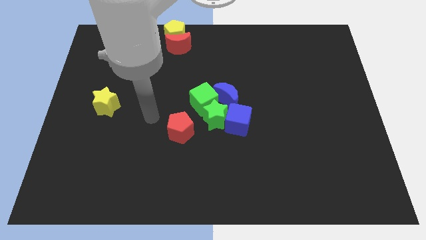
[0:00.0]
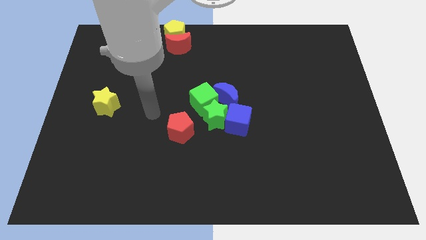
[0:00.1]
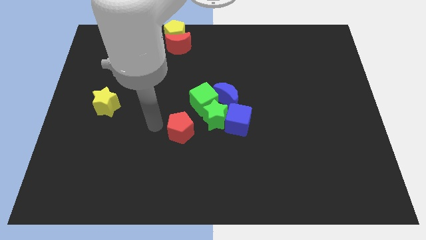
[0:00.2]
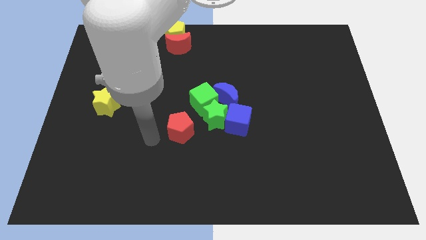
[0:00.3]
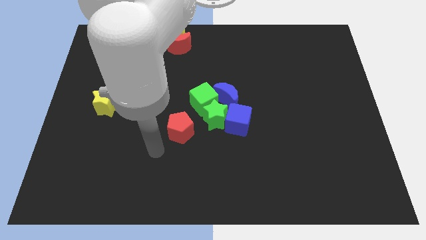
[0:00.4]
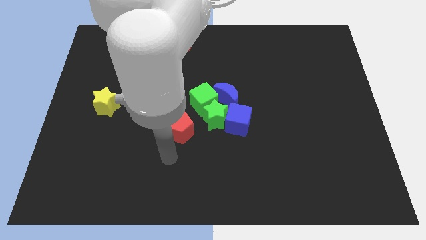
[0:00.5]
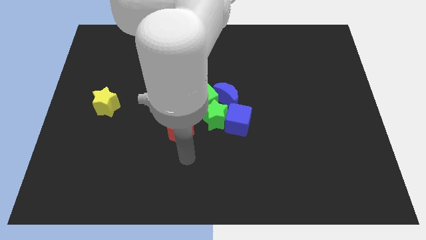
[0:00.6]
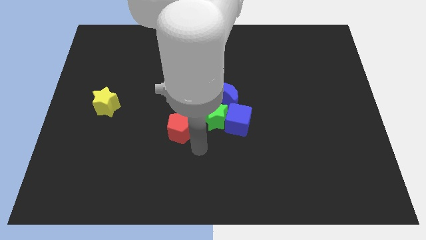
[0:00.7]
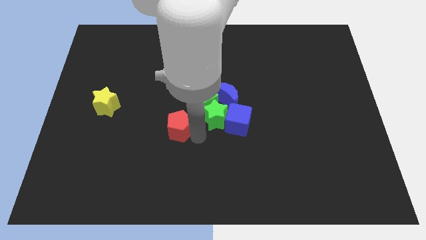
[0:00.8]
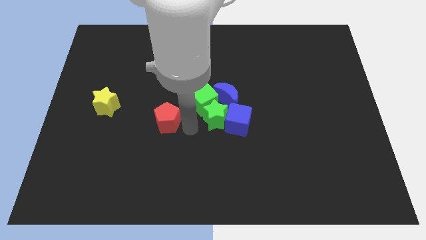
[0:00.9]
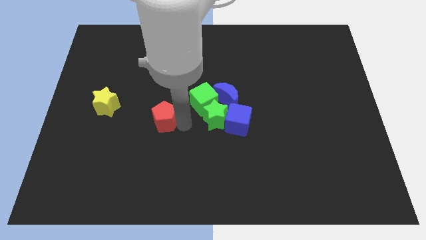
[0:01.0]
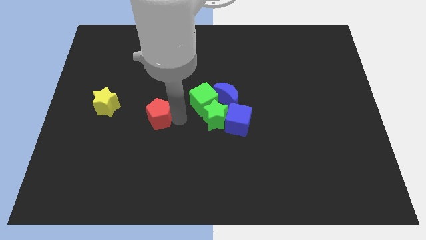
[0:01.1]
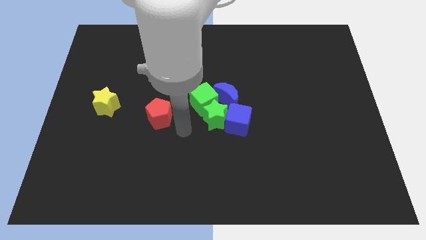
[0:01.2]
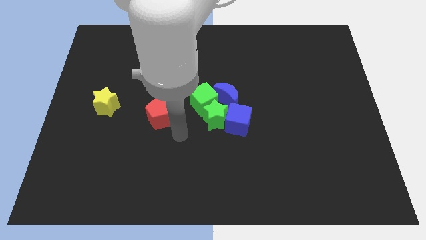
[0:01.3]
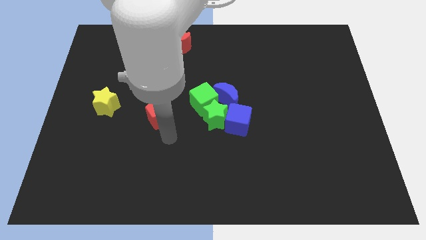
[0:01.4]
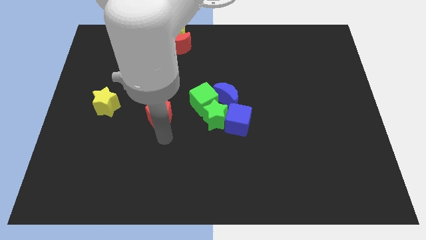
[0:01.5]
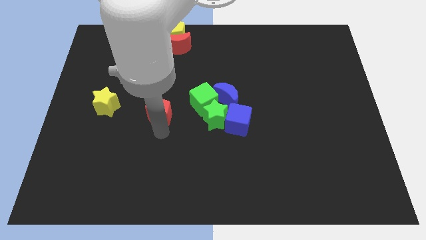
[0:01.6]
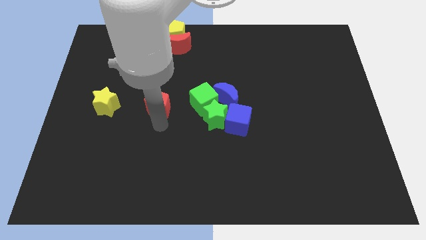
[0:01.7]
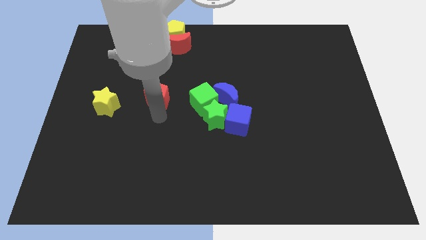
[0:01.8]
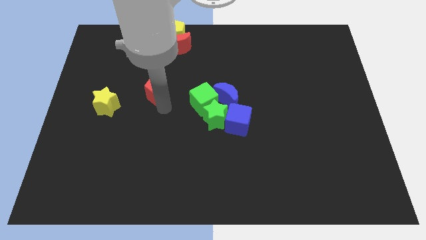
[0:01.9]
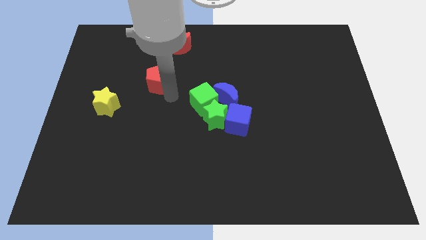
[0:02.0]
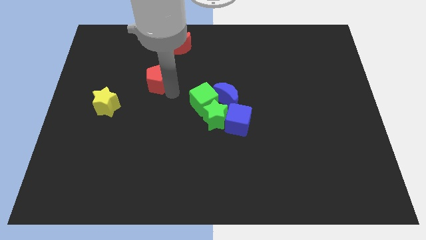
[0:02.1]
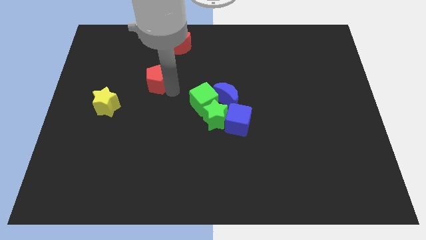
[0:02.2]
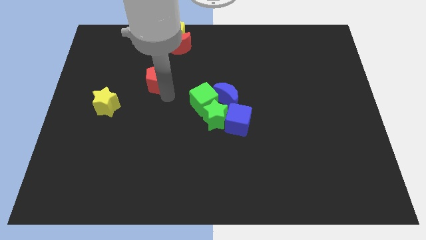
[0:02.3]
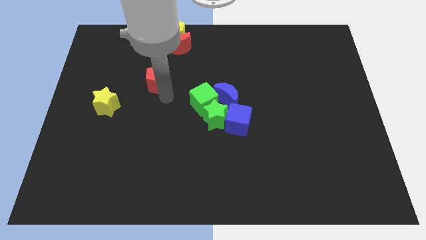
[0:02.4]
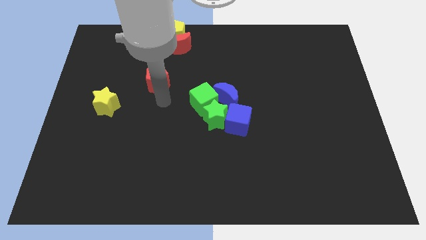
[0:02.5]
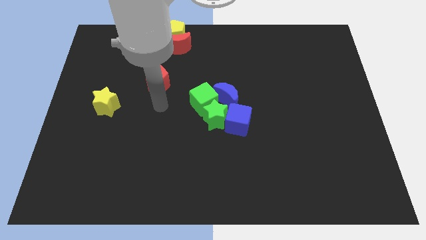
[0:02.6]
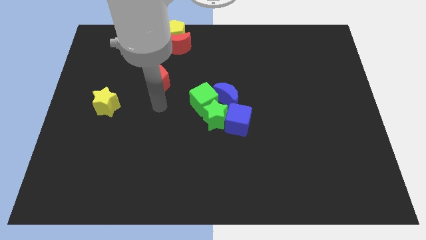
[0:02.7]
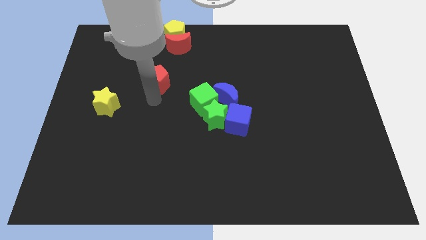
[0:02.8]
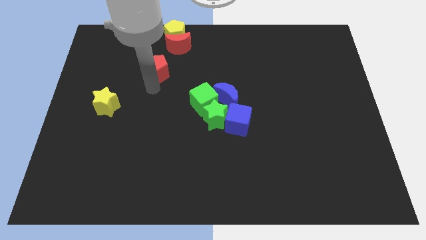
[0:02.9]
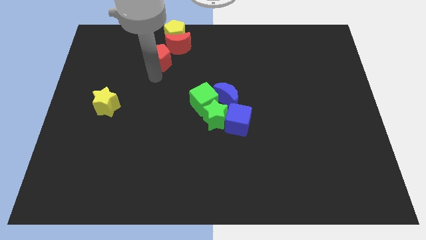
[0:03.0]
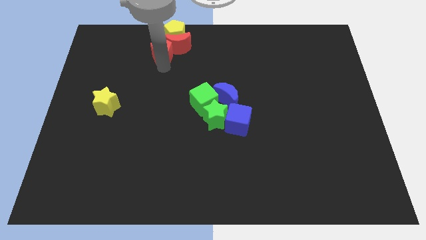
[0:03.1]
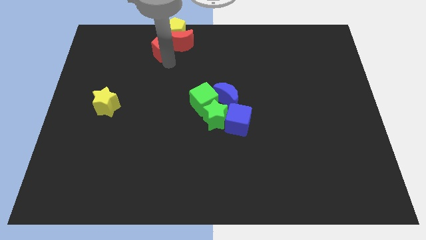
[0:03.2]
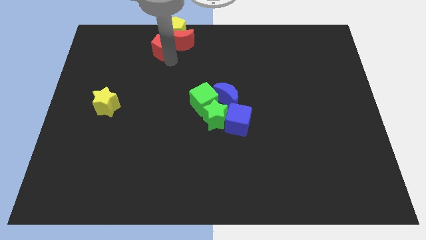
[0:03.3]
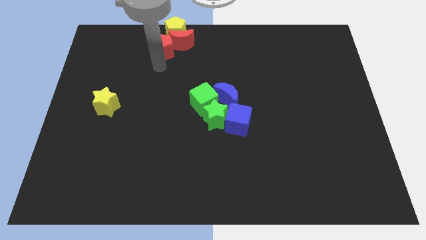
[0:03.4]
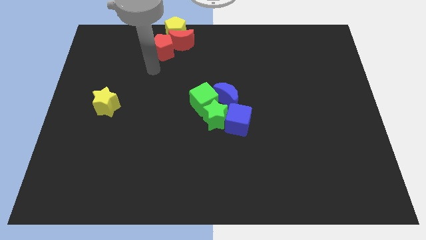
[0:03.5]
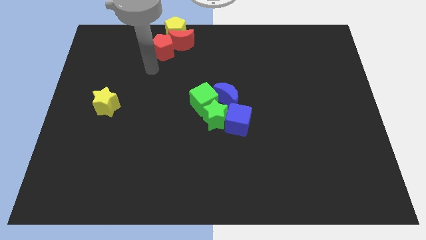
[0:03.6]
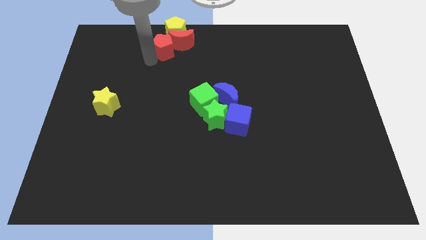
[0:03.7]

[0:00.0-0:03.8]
move the red pentagon slide the left side of the red crescent

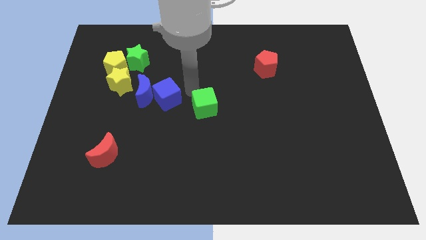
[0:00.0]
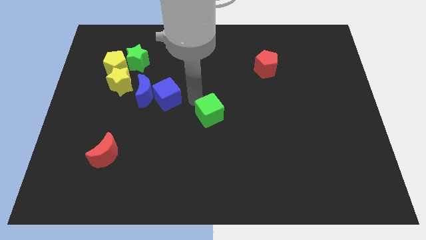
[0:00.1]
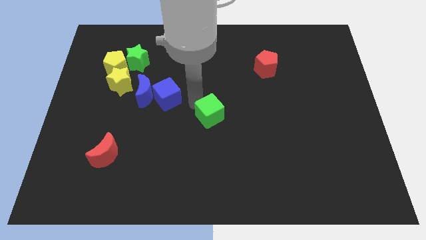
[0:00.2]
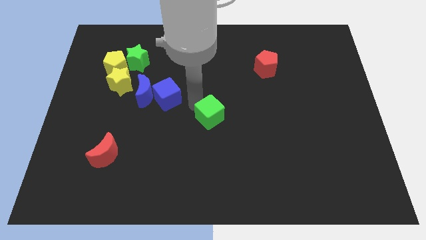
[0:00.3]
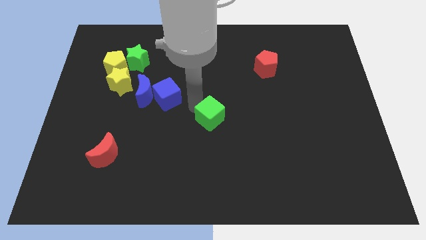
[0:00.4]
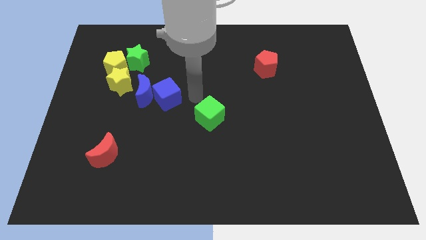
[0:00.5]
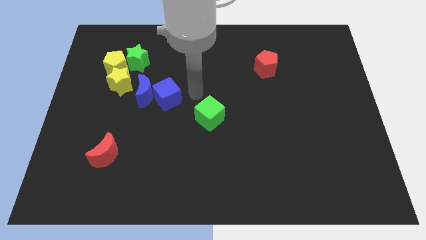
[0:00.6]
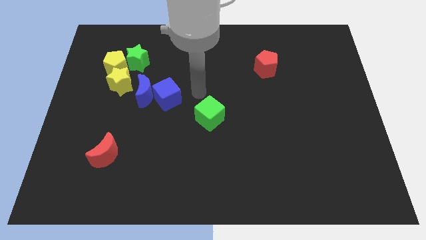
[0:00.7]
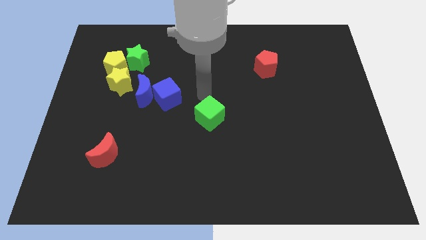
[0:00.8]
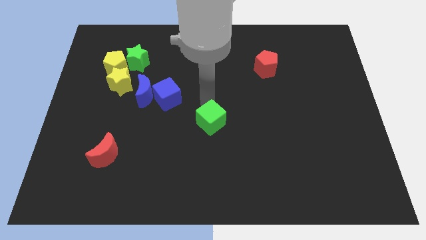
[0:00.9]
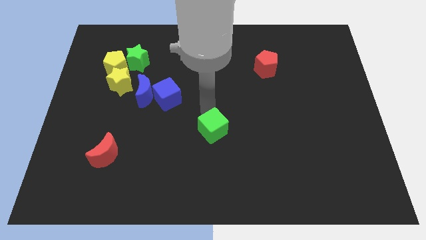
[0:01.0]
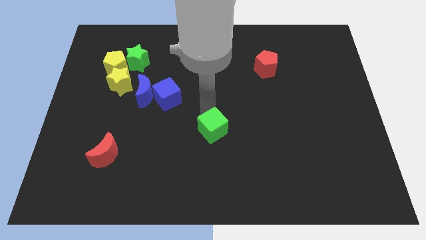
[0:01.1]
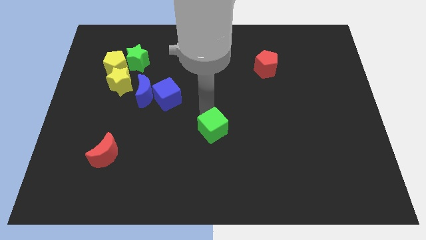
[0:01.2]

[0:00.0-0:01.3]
place the green cube diagonally to the red penatgon

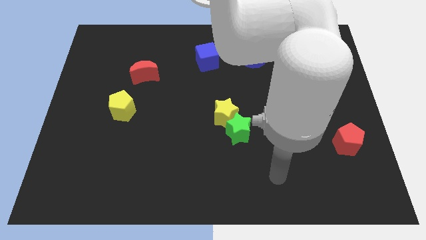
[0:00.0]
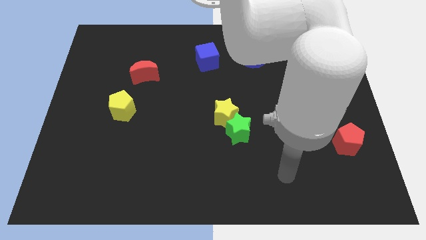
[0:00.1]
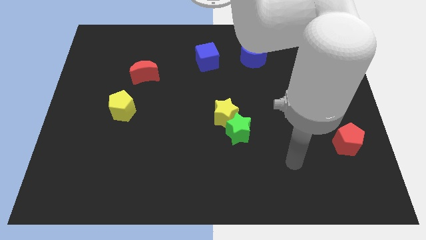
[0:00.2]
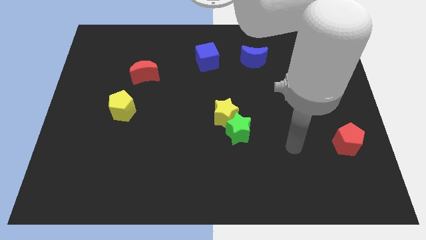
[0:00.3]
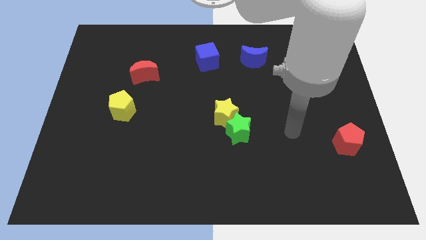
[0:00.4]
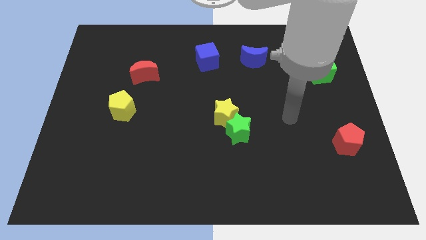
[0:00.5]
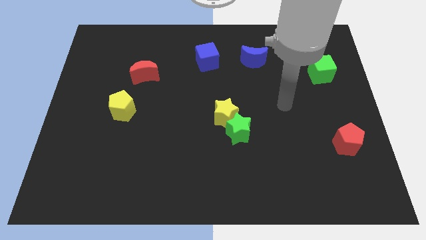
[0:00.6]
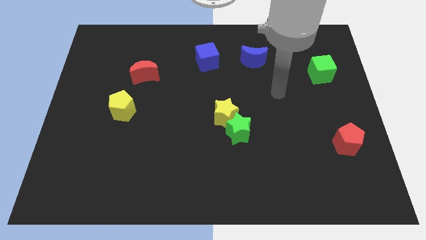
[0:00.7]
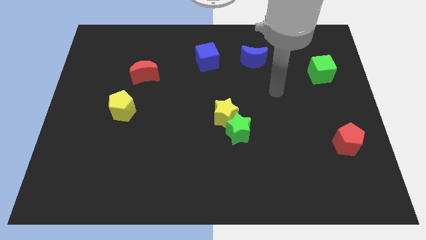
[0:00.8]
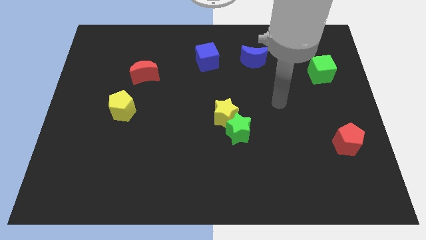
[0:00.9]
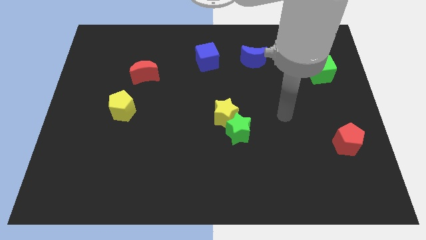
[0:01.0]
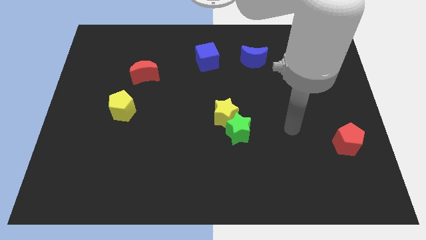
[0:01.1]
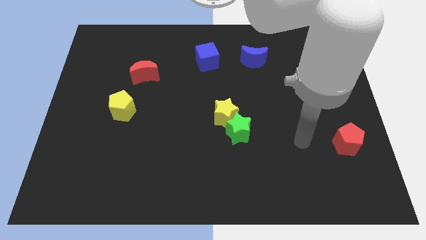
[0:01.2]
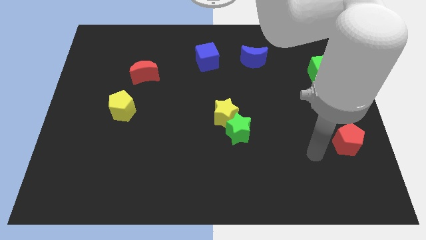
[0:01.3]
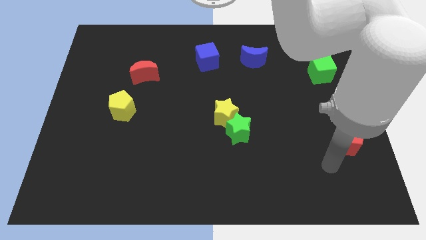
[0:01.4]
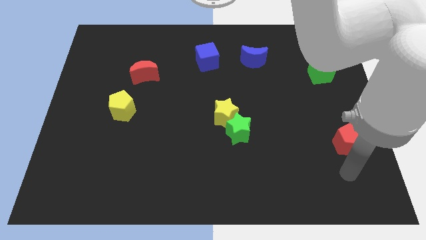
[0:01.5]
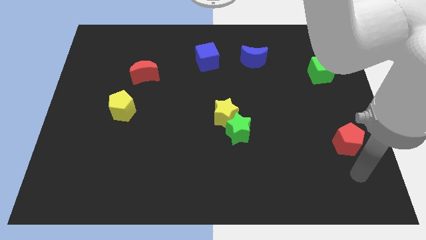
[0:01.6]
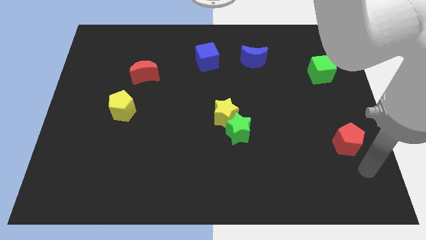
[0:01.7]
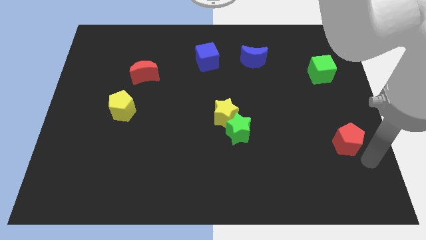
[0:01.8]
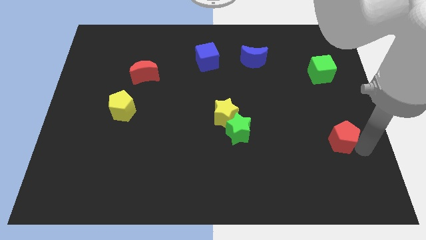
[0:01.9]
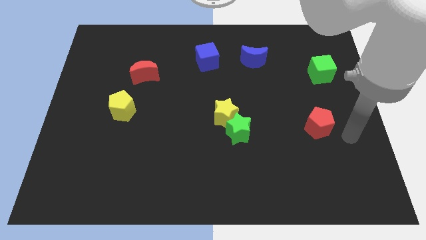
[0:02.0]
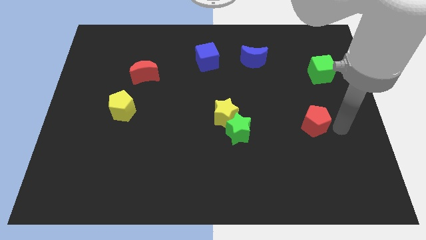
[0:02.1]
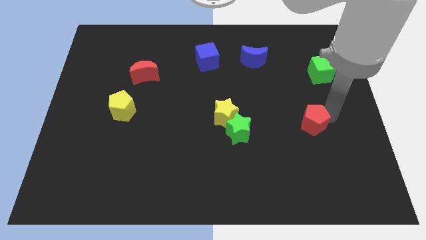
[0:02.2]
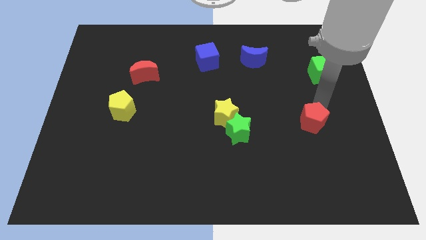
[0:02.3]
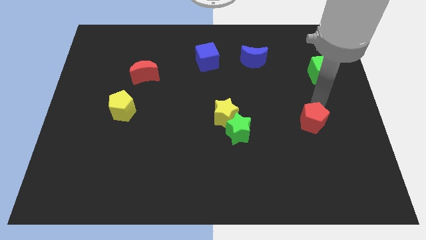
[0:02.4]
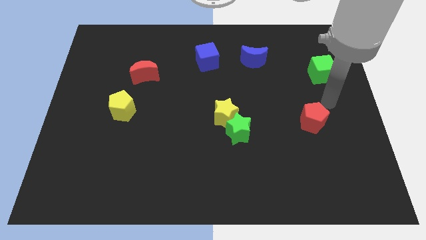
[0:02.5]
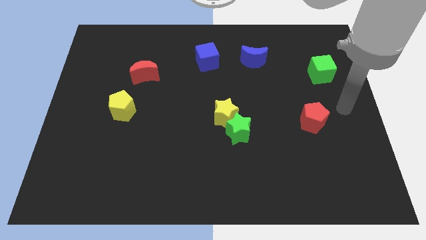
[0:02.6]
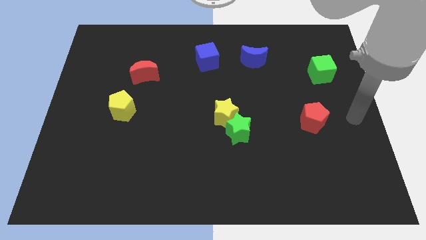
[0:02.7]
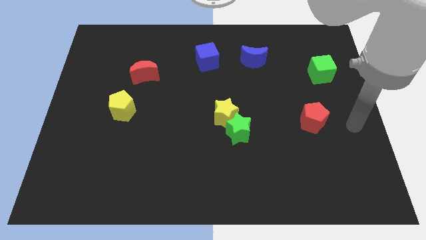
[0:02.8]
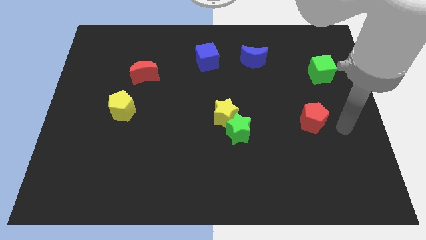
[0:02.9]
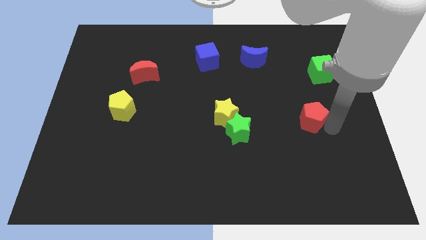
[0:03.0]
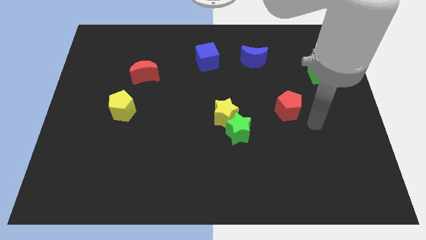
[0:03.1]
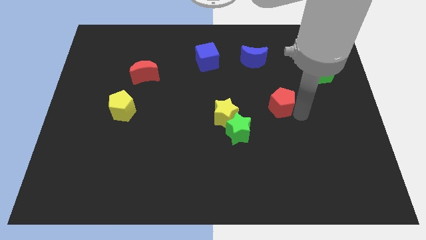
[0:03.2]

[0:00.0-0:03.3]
place the red pentagon in between the green blocks

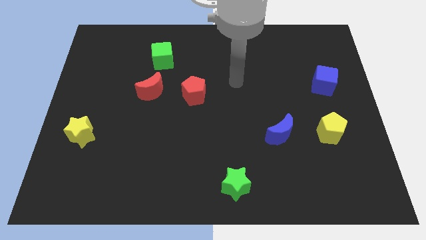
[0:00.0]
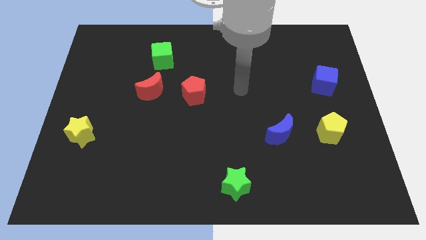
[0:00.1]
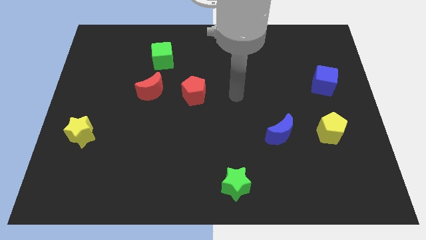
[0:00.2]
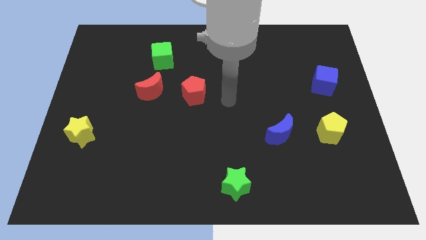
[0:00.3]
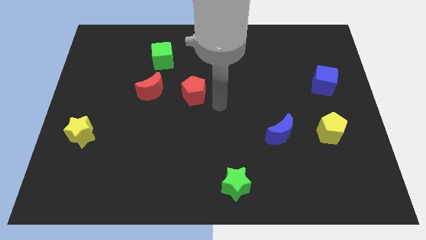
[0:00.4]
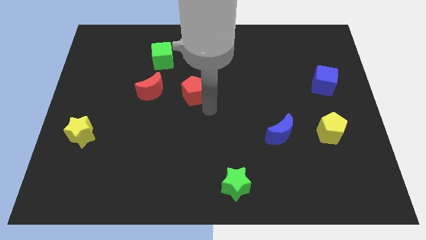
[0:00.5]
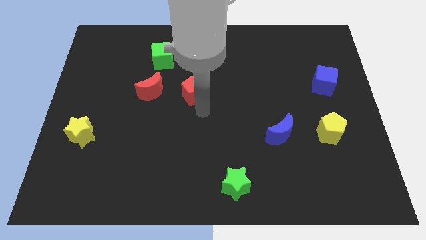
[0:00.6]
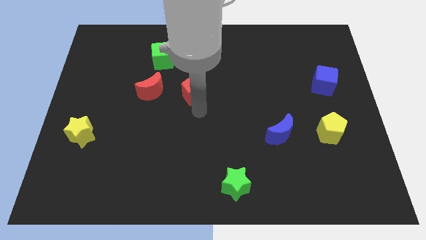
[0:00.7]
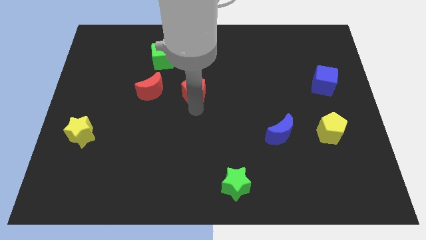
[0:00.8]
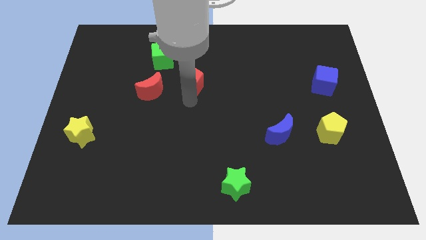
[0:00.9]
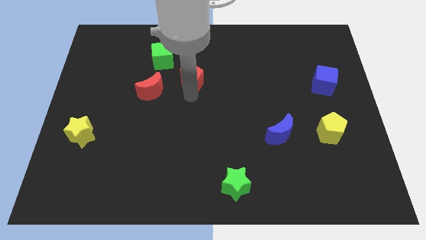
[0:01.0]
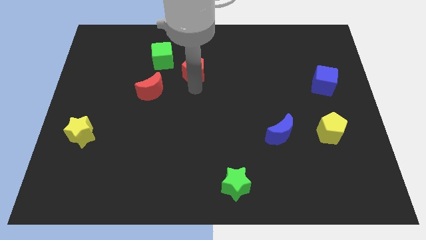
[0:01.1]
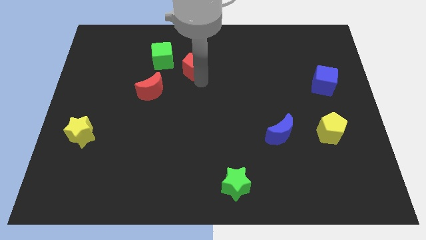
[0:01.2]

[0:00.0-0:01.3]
push the red pentagon slightly to the top of the board
